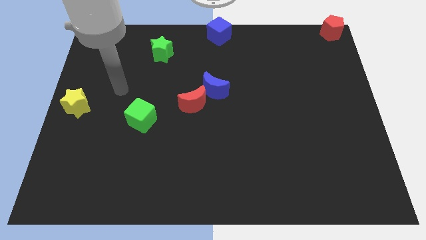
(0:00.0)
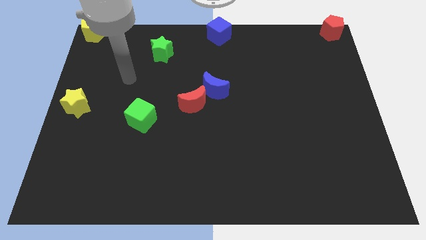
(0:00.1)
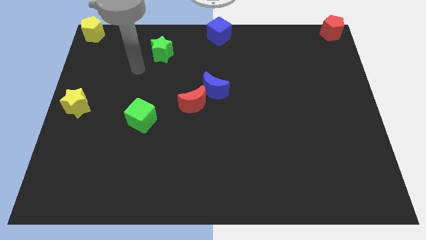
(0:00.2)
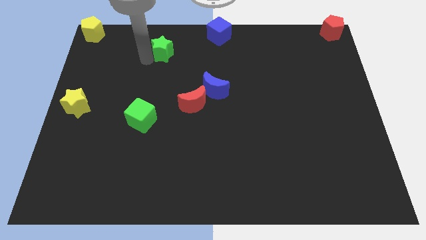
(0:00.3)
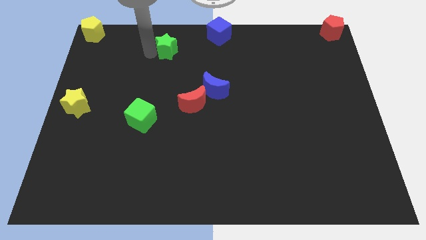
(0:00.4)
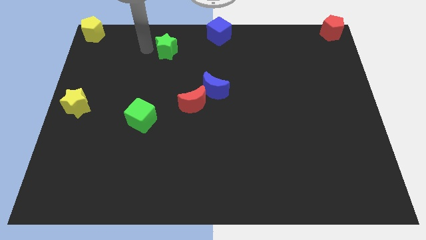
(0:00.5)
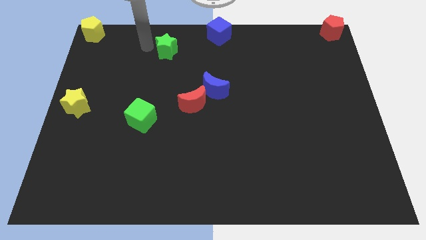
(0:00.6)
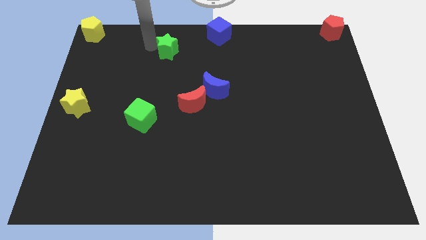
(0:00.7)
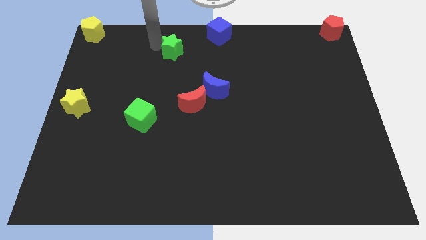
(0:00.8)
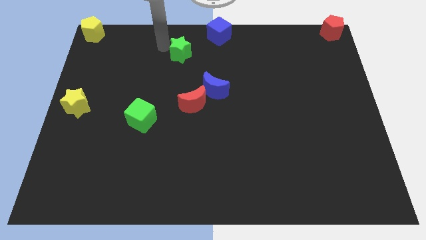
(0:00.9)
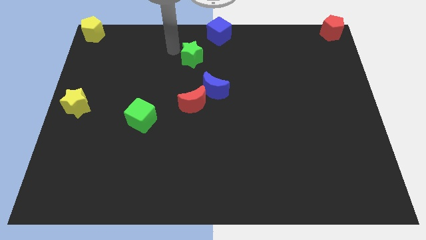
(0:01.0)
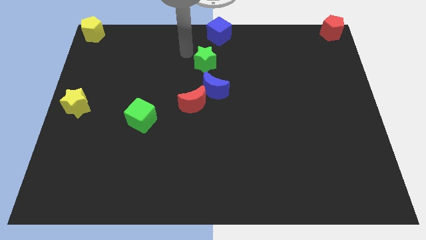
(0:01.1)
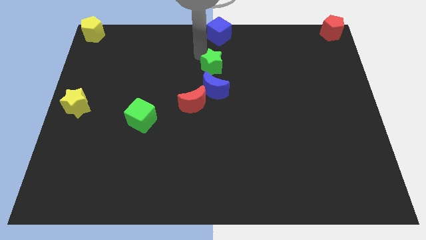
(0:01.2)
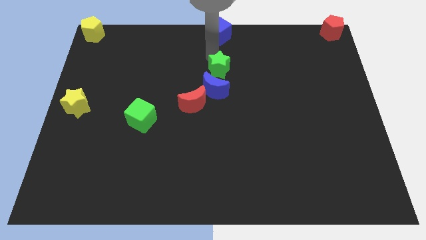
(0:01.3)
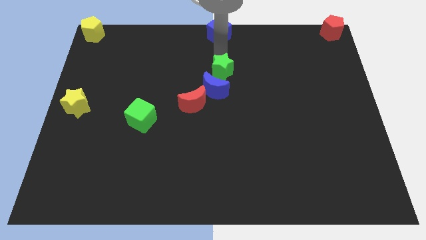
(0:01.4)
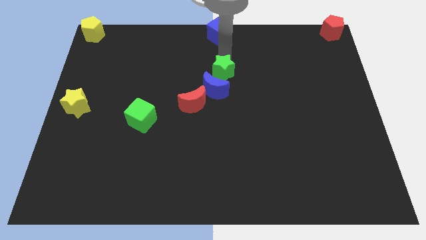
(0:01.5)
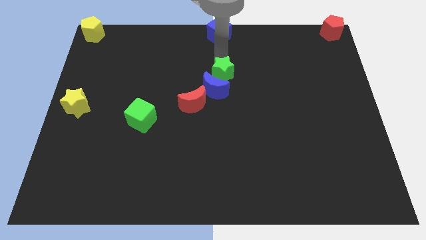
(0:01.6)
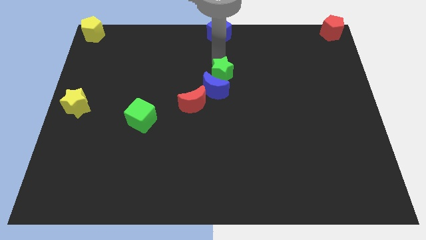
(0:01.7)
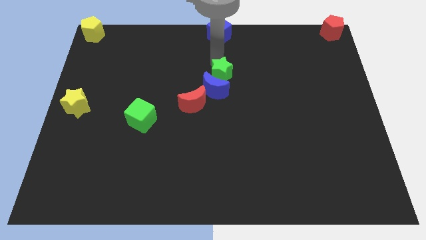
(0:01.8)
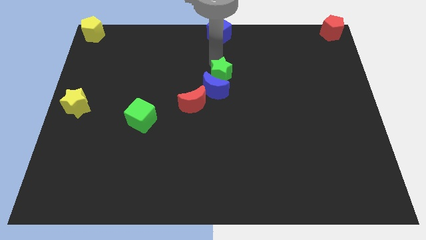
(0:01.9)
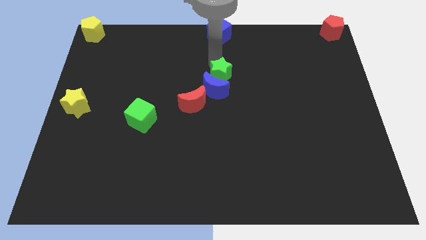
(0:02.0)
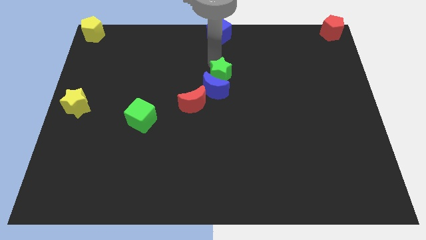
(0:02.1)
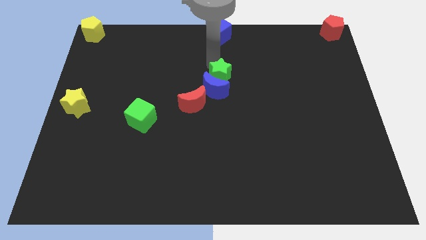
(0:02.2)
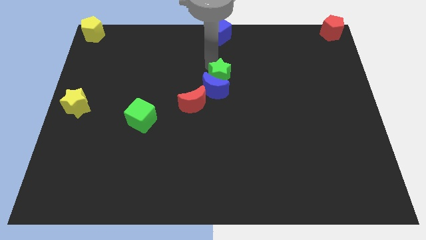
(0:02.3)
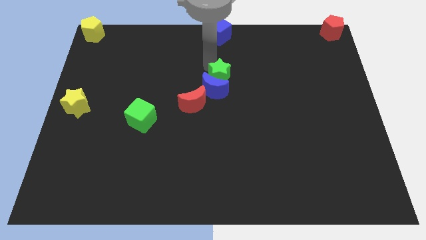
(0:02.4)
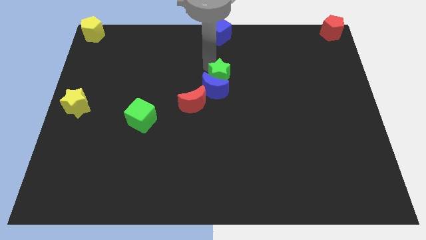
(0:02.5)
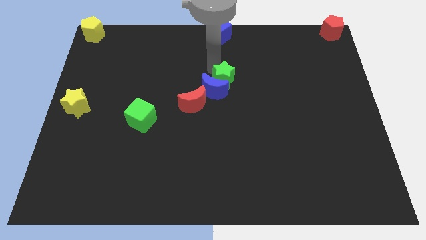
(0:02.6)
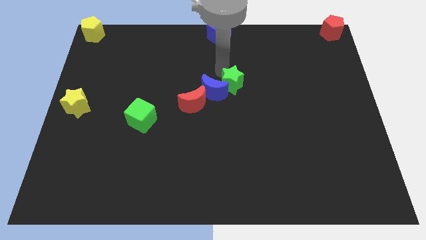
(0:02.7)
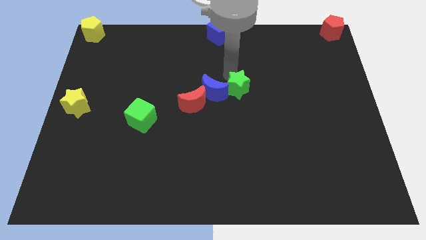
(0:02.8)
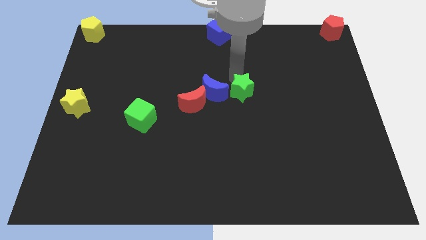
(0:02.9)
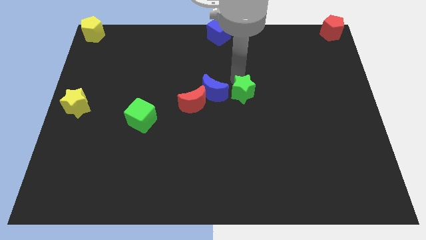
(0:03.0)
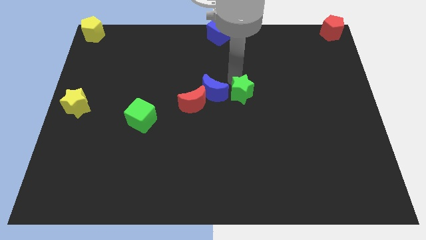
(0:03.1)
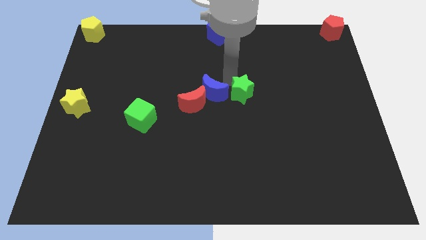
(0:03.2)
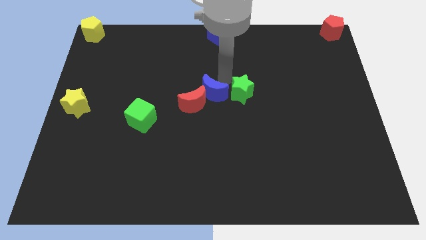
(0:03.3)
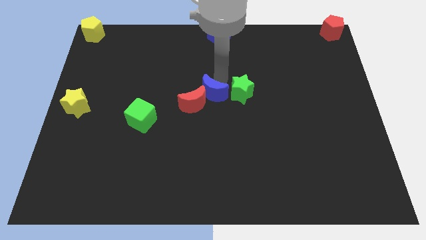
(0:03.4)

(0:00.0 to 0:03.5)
slide the green star to the left side of the blue moon

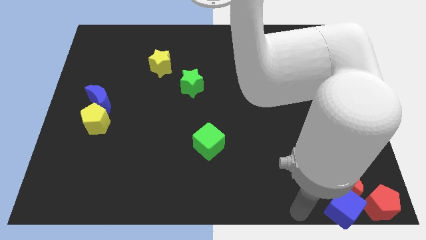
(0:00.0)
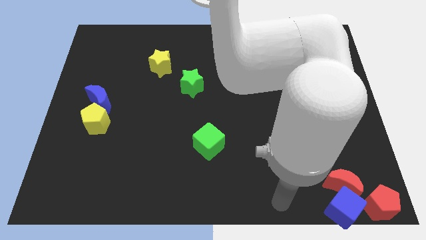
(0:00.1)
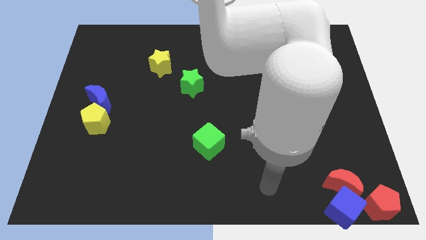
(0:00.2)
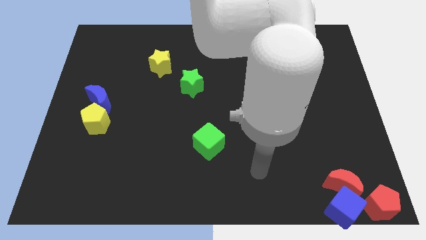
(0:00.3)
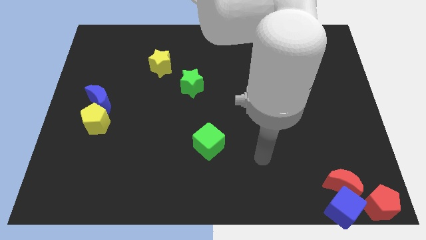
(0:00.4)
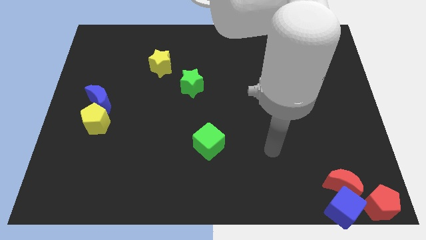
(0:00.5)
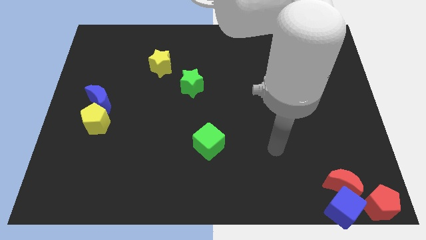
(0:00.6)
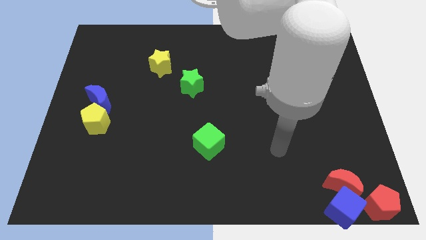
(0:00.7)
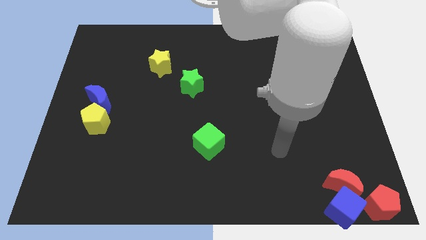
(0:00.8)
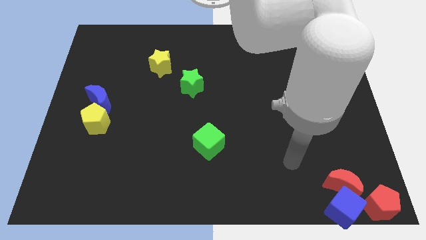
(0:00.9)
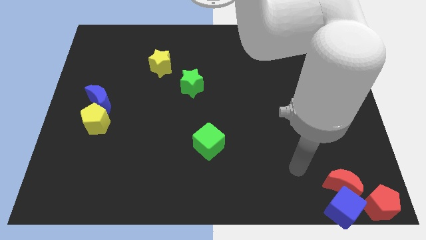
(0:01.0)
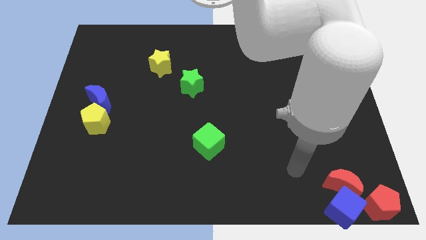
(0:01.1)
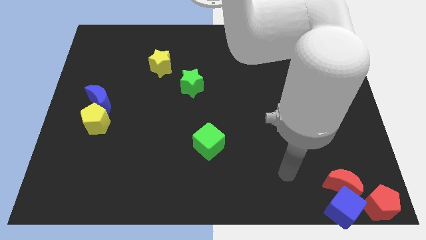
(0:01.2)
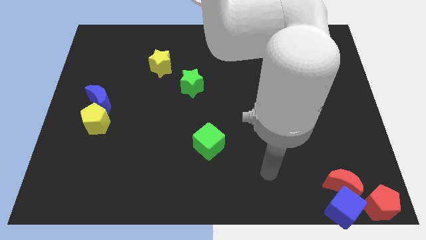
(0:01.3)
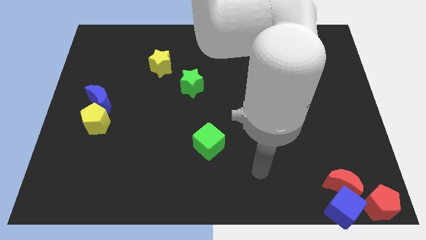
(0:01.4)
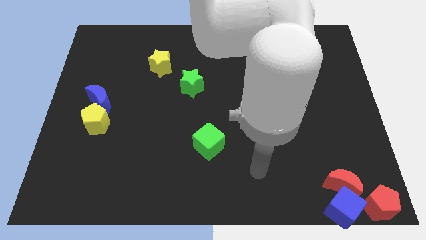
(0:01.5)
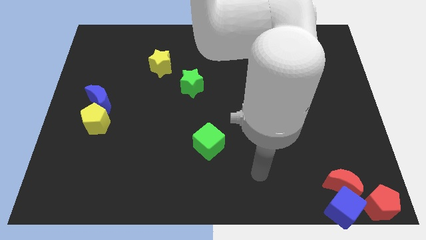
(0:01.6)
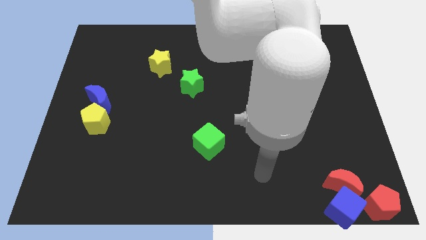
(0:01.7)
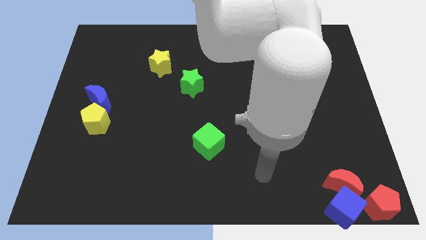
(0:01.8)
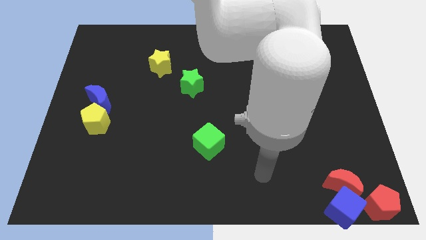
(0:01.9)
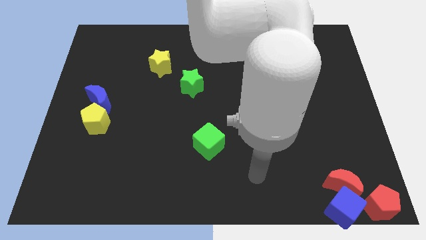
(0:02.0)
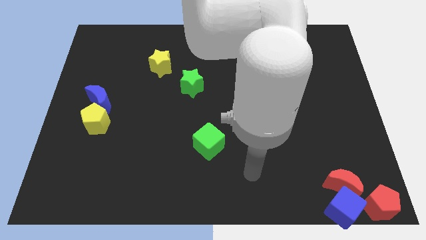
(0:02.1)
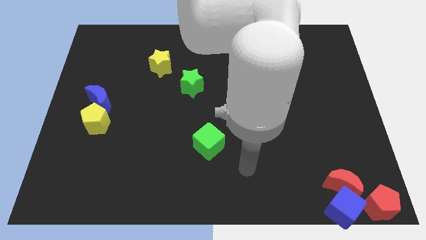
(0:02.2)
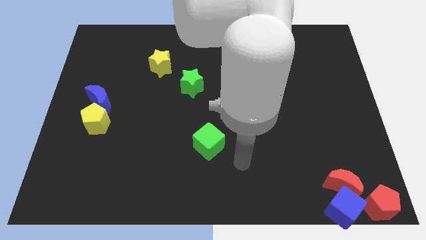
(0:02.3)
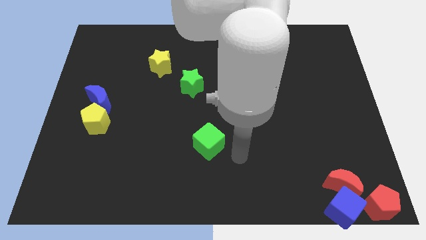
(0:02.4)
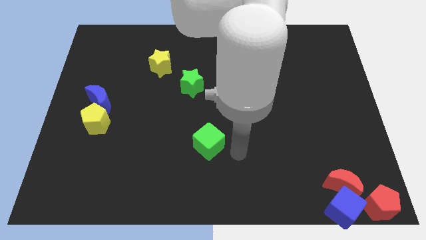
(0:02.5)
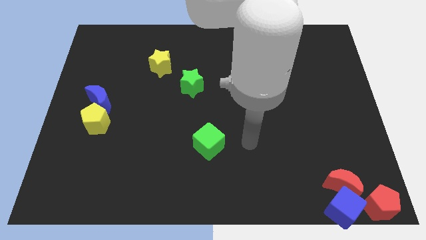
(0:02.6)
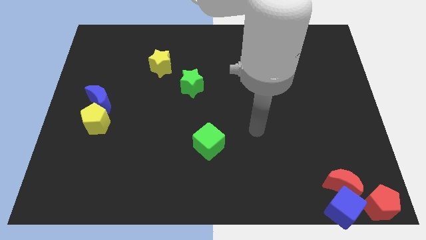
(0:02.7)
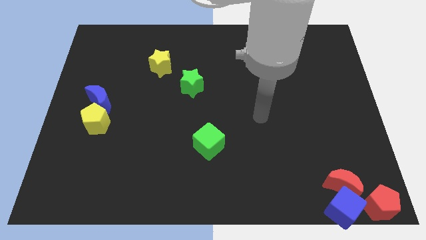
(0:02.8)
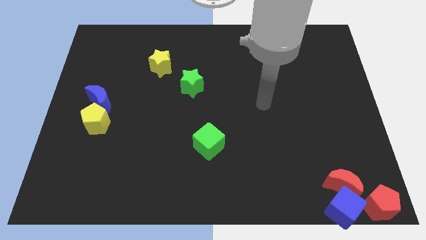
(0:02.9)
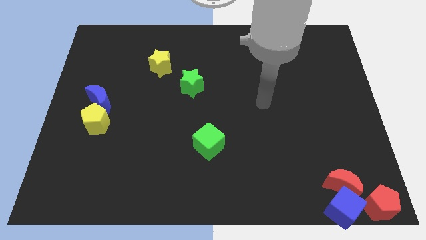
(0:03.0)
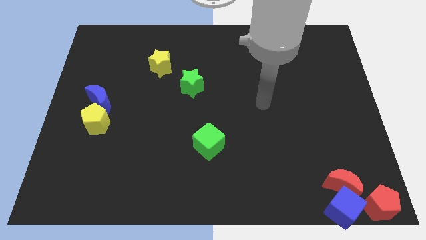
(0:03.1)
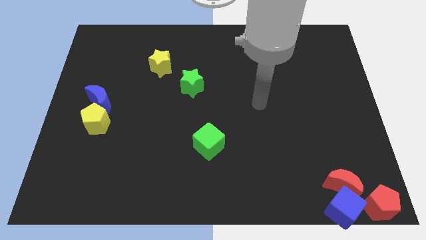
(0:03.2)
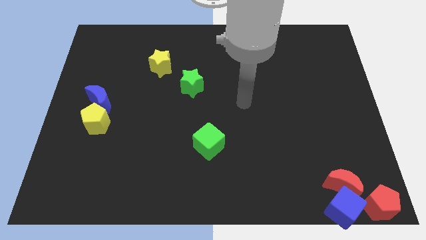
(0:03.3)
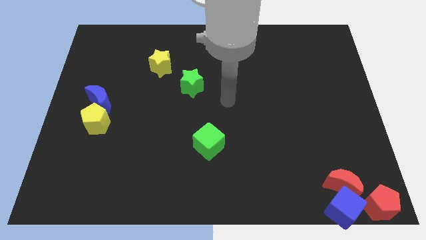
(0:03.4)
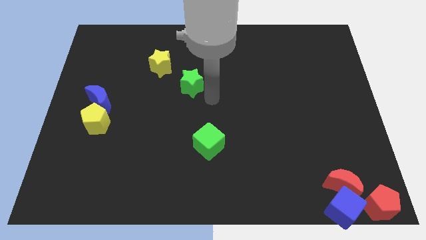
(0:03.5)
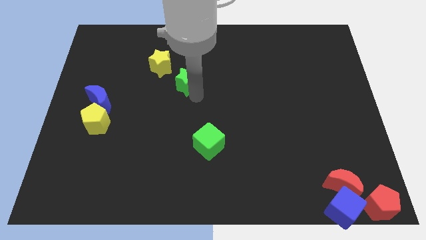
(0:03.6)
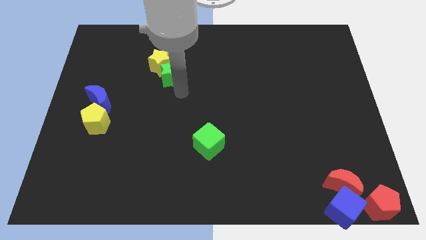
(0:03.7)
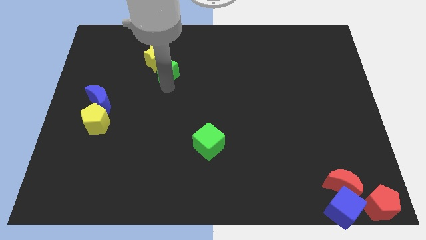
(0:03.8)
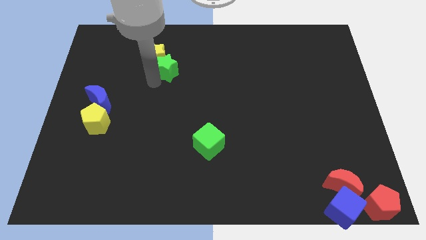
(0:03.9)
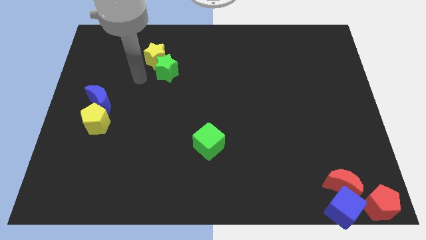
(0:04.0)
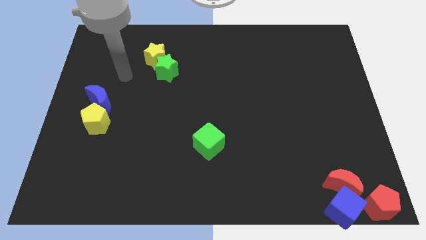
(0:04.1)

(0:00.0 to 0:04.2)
push the green star into the yellow star

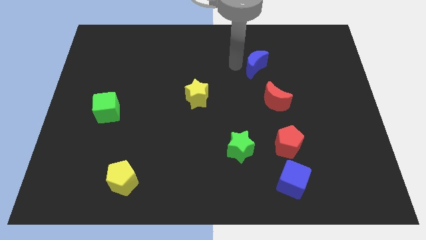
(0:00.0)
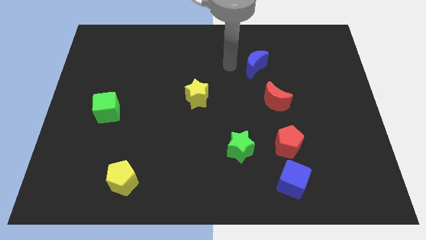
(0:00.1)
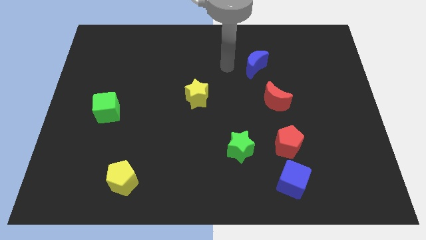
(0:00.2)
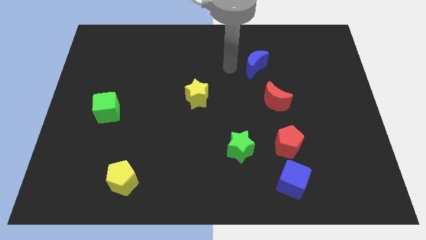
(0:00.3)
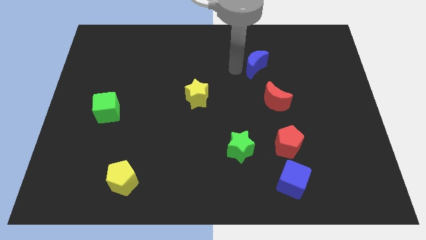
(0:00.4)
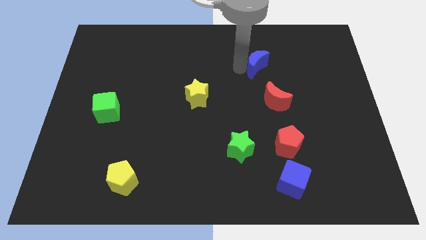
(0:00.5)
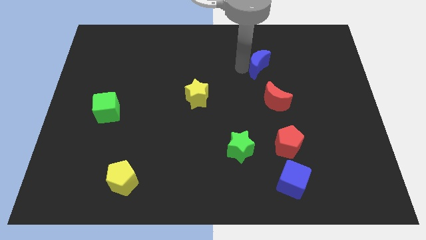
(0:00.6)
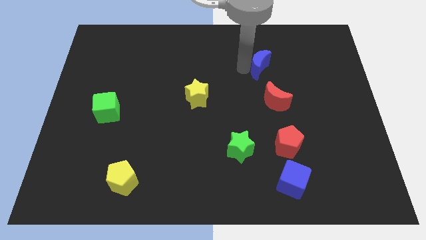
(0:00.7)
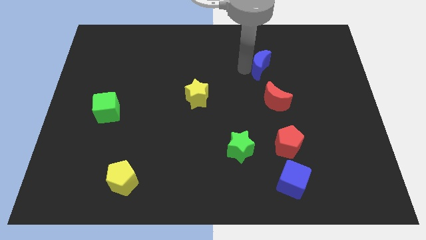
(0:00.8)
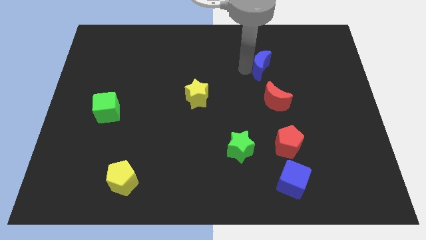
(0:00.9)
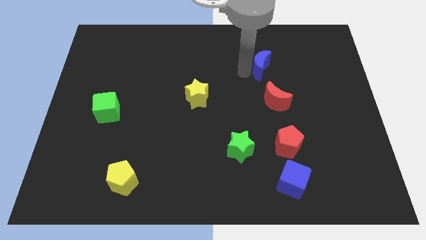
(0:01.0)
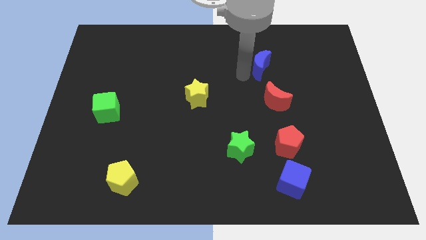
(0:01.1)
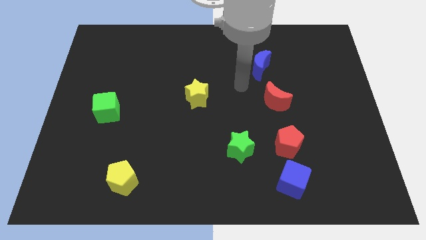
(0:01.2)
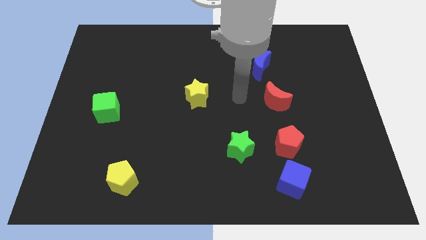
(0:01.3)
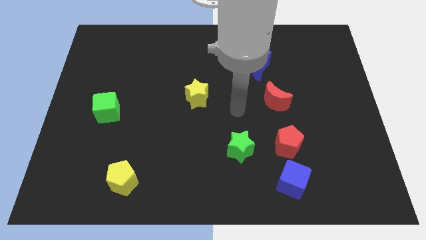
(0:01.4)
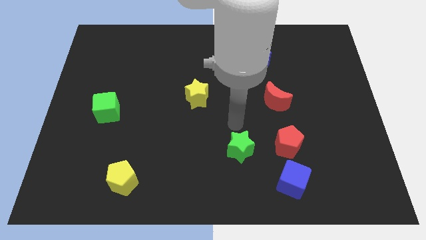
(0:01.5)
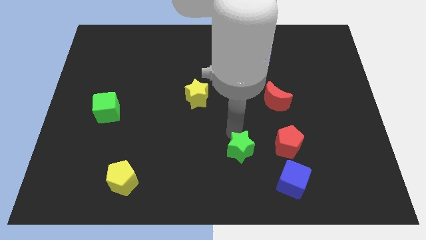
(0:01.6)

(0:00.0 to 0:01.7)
place the arm on the top side of the green star
